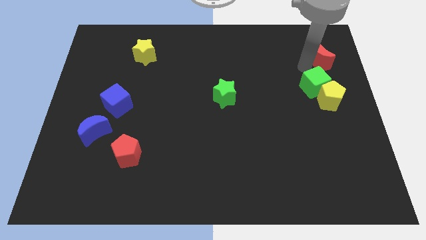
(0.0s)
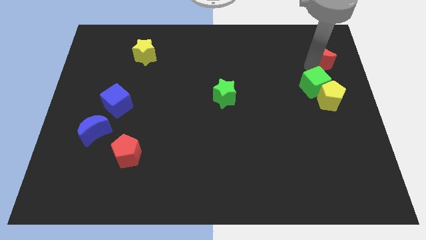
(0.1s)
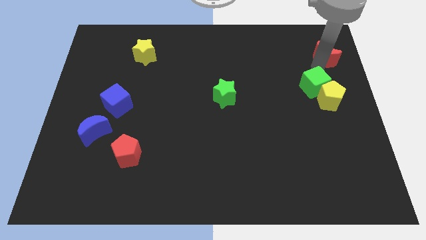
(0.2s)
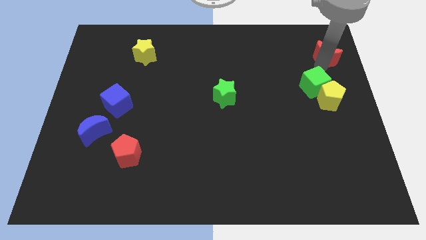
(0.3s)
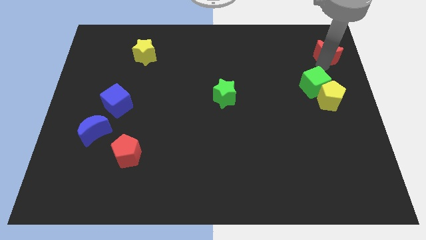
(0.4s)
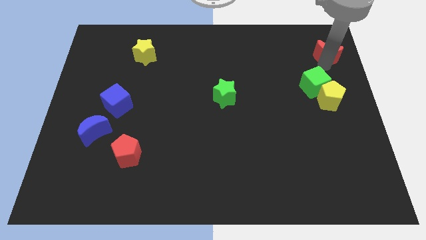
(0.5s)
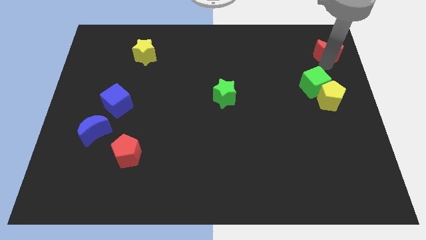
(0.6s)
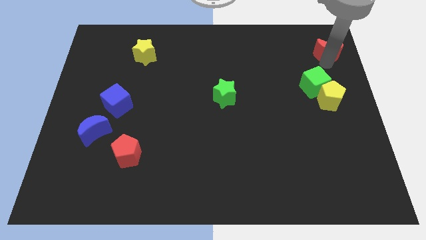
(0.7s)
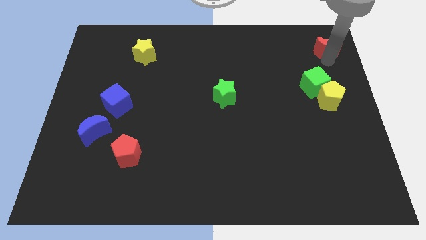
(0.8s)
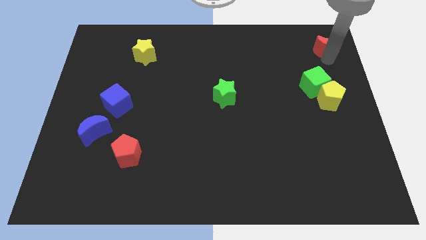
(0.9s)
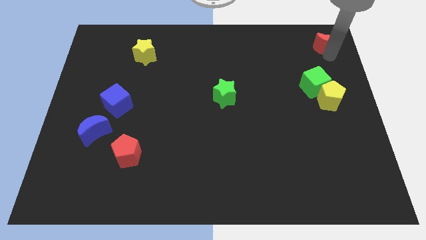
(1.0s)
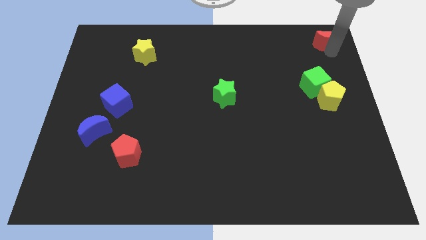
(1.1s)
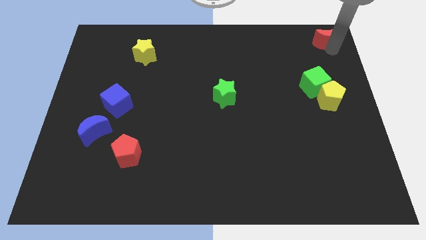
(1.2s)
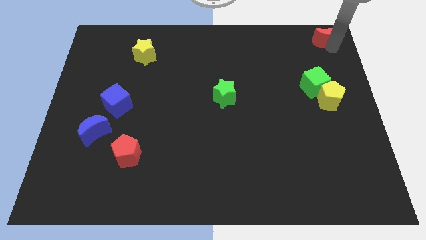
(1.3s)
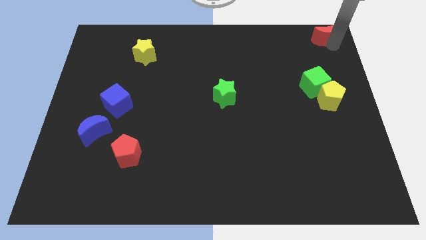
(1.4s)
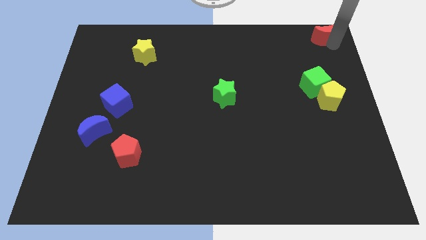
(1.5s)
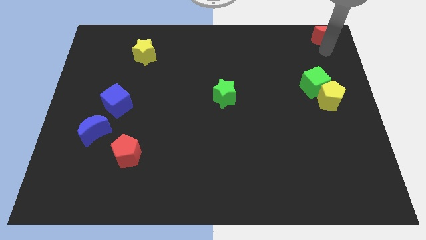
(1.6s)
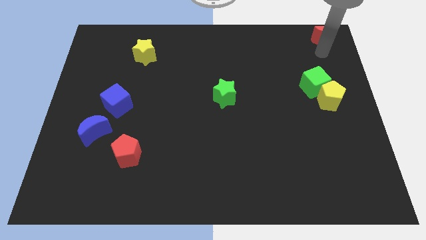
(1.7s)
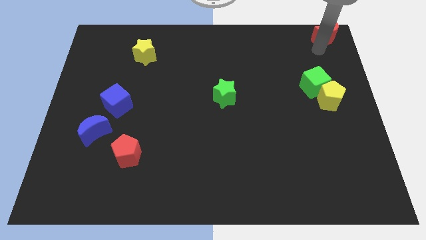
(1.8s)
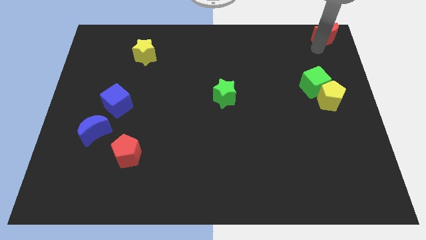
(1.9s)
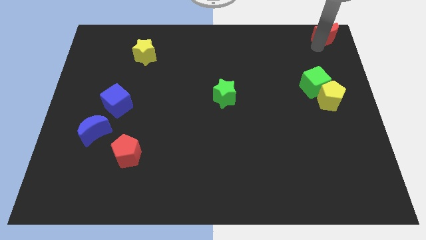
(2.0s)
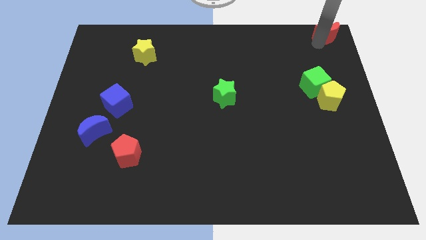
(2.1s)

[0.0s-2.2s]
move the red crescent to the top right corner of the board

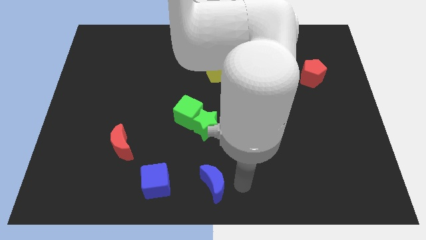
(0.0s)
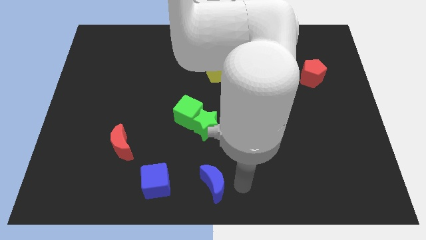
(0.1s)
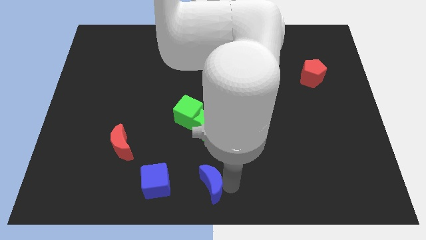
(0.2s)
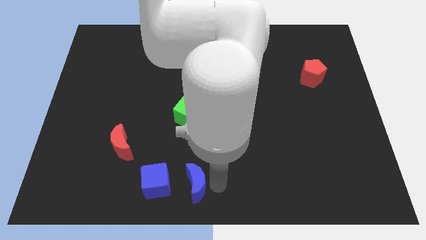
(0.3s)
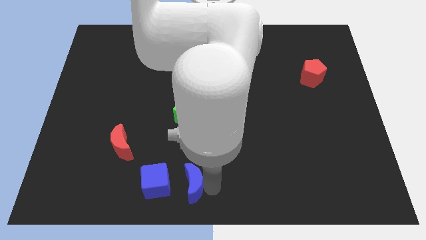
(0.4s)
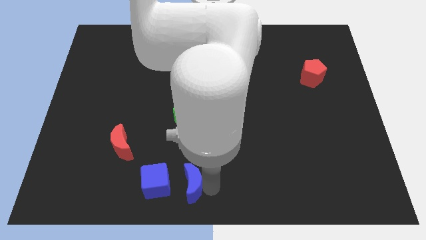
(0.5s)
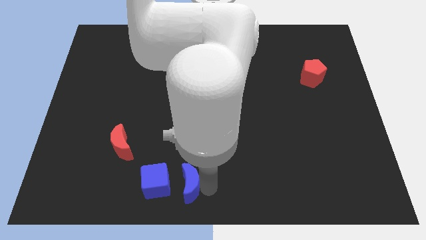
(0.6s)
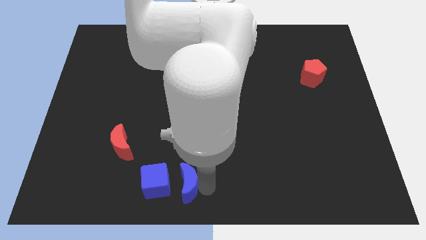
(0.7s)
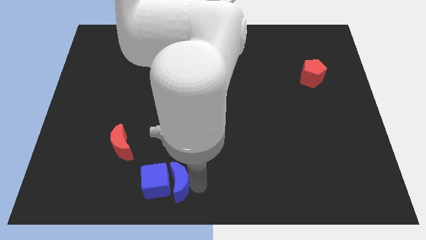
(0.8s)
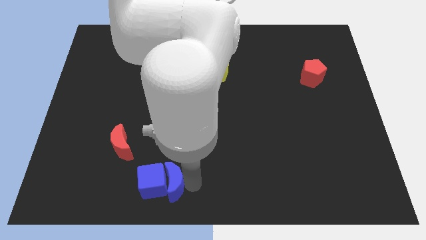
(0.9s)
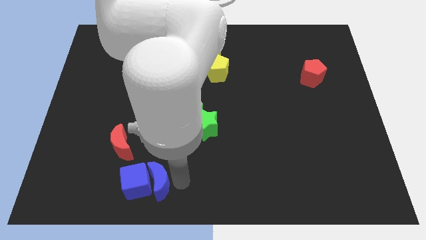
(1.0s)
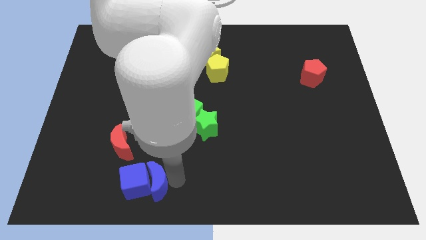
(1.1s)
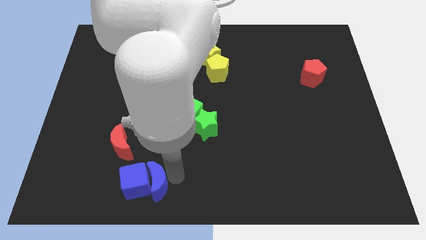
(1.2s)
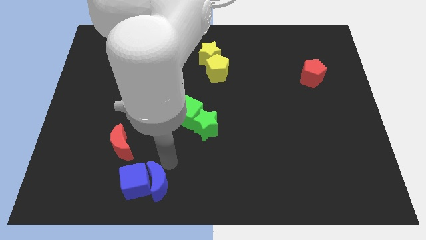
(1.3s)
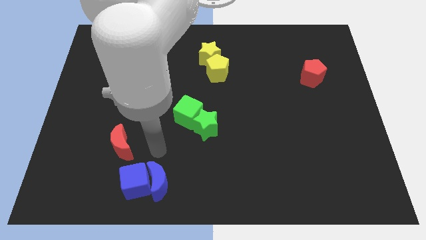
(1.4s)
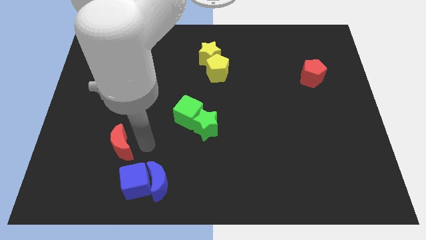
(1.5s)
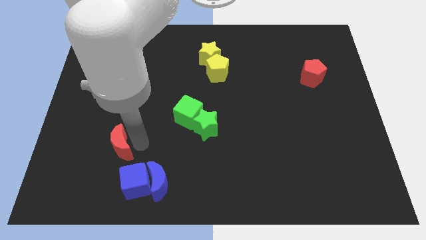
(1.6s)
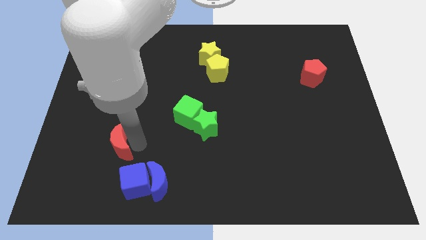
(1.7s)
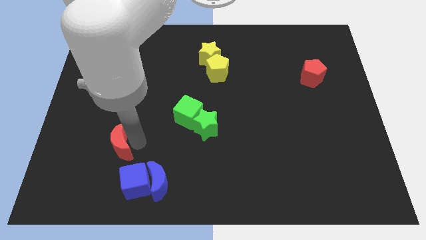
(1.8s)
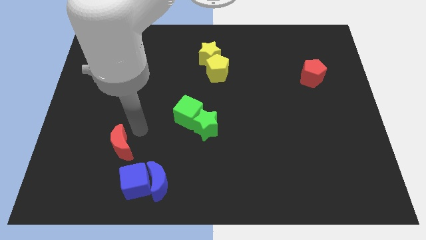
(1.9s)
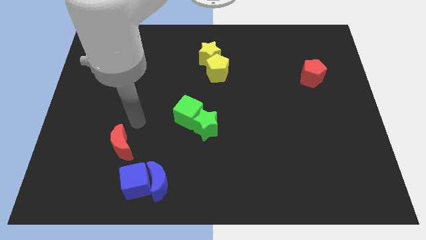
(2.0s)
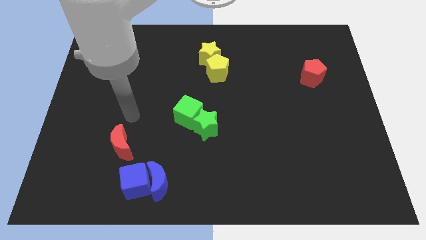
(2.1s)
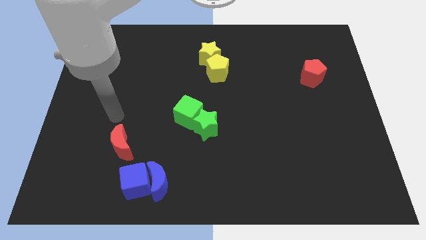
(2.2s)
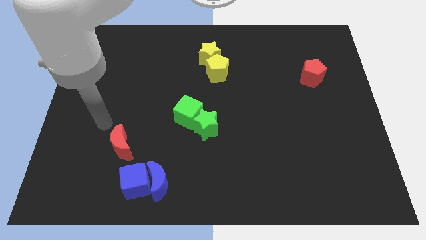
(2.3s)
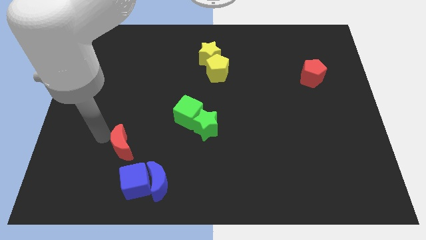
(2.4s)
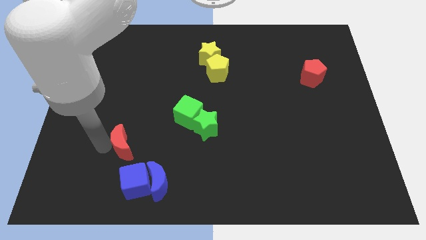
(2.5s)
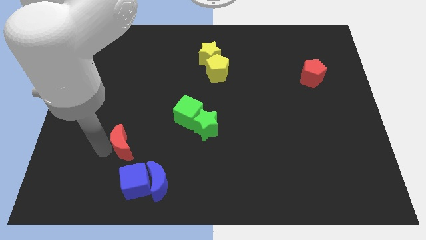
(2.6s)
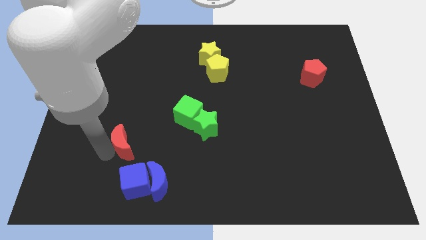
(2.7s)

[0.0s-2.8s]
move the blue crescent into the right side of the blue cube

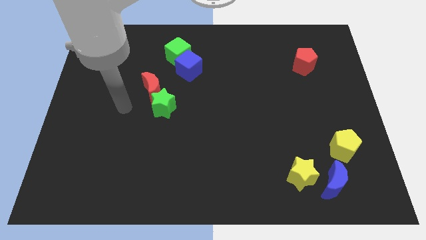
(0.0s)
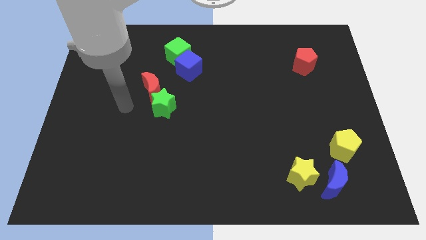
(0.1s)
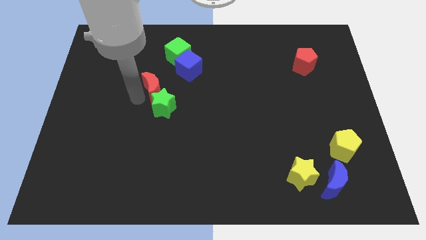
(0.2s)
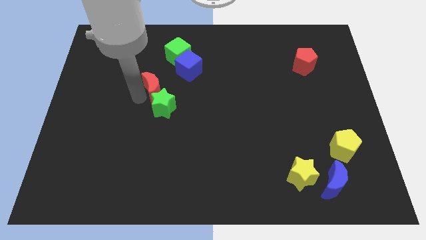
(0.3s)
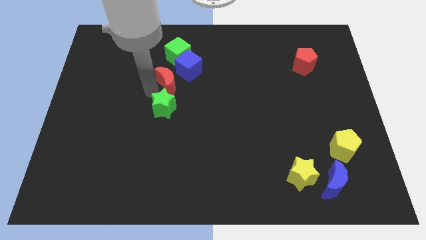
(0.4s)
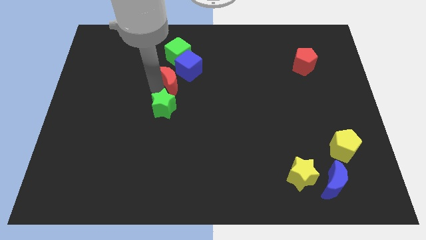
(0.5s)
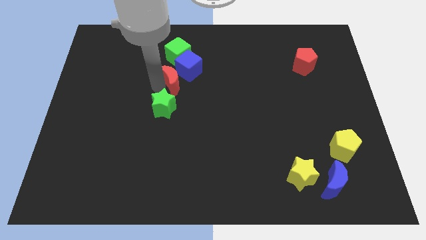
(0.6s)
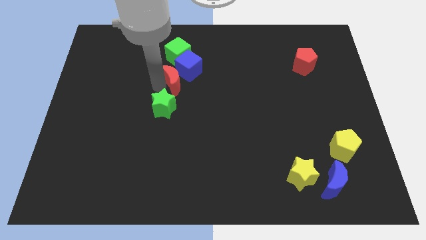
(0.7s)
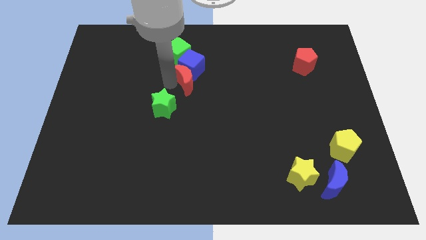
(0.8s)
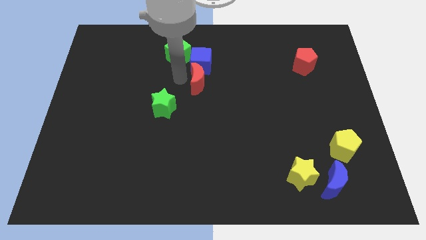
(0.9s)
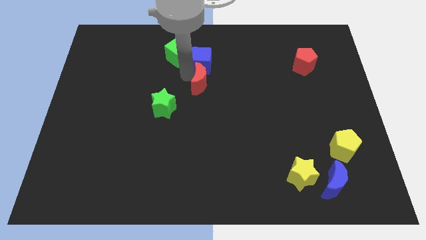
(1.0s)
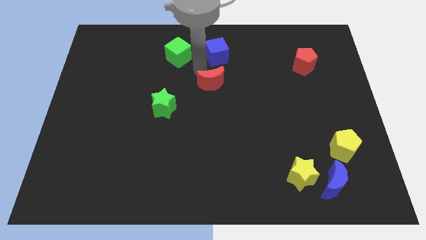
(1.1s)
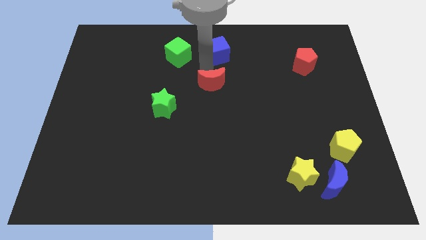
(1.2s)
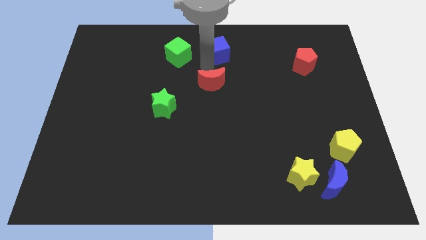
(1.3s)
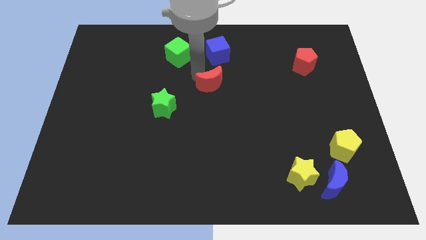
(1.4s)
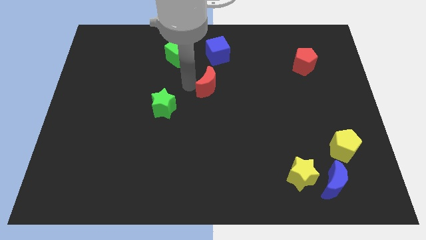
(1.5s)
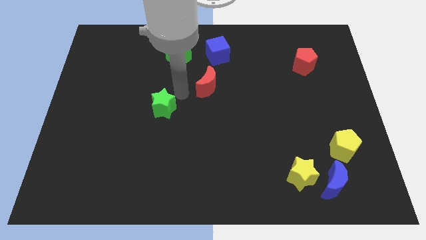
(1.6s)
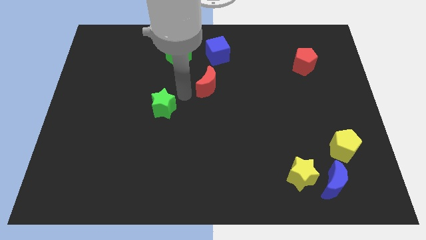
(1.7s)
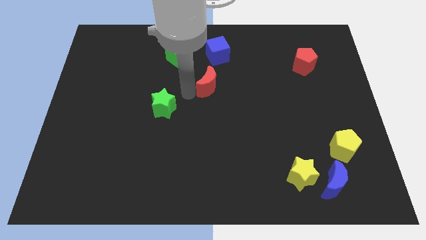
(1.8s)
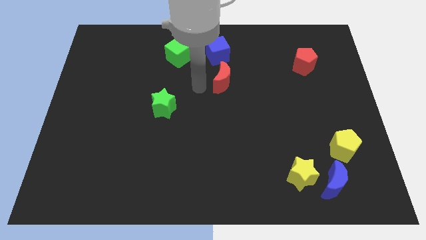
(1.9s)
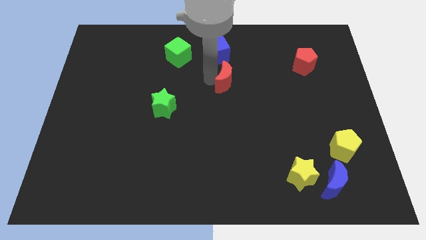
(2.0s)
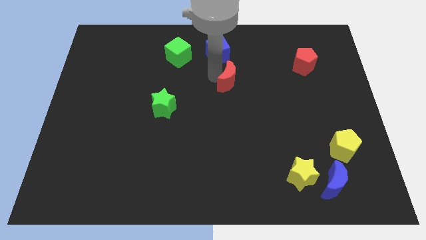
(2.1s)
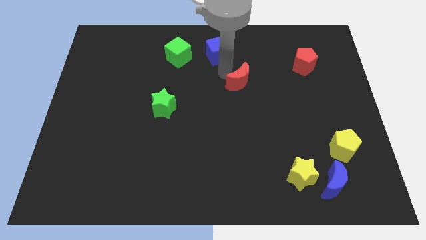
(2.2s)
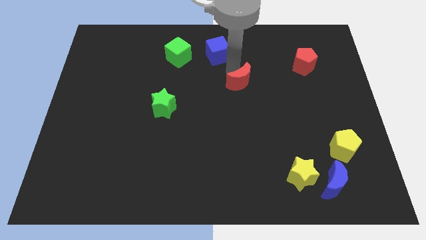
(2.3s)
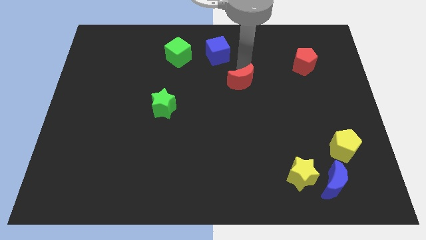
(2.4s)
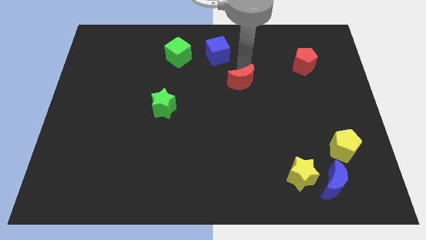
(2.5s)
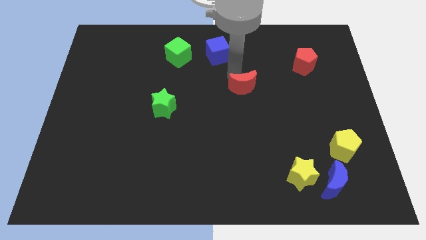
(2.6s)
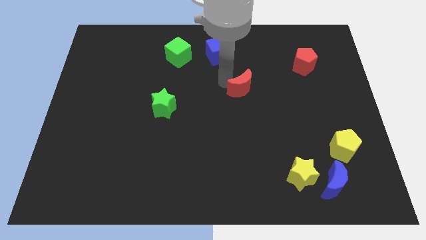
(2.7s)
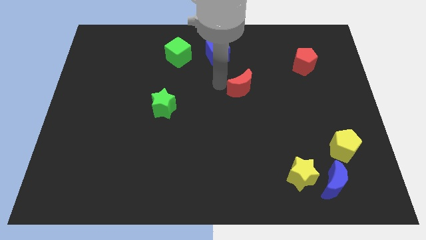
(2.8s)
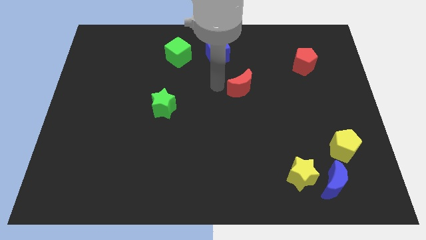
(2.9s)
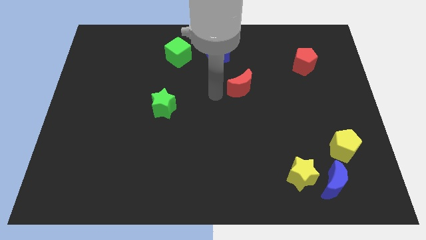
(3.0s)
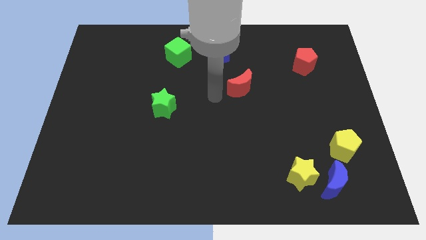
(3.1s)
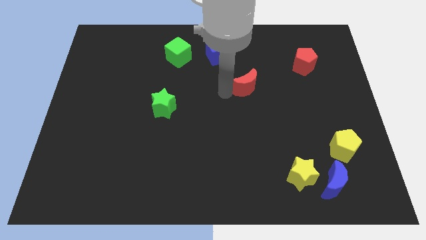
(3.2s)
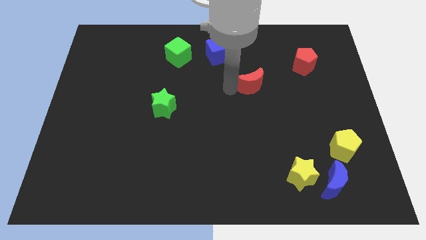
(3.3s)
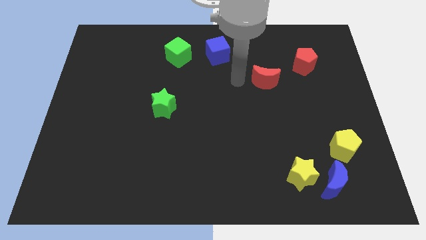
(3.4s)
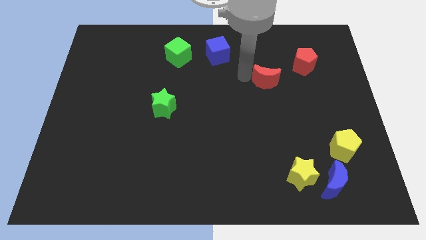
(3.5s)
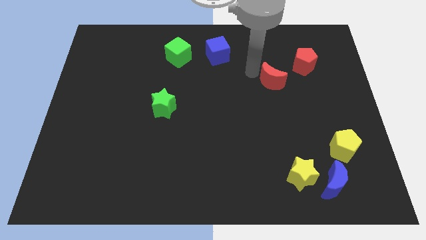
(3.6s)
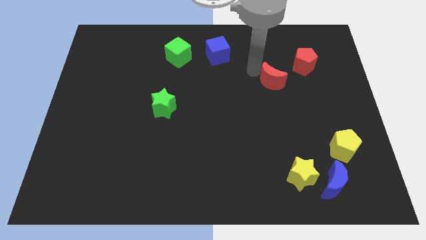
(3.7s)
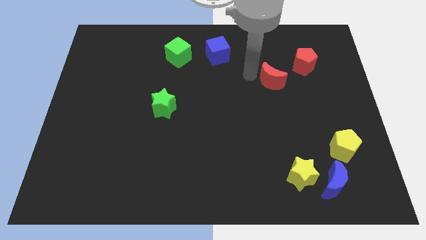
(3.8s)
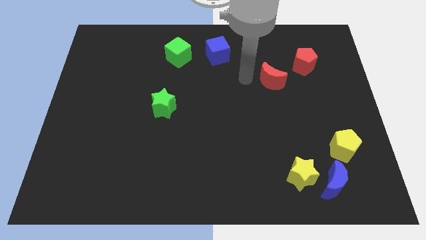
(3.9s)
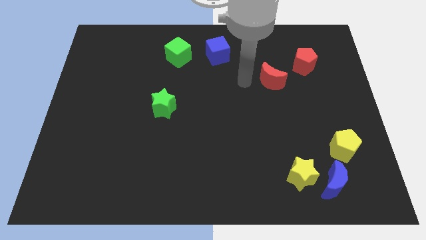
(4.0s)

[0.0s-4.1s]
push the red crescent to the right of the board
